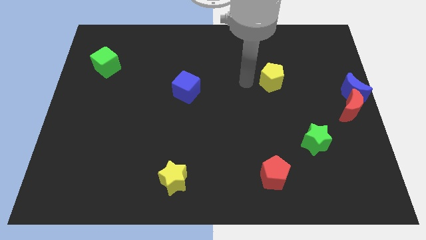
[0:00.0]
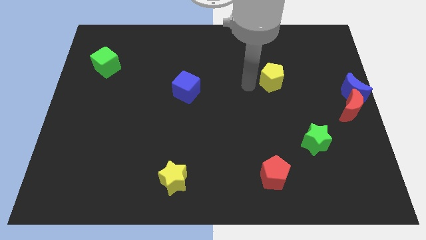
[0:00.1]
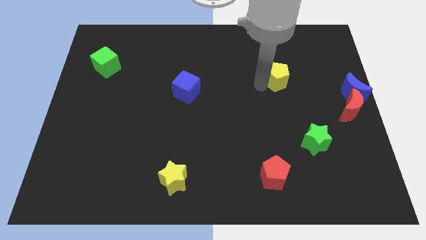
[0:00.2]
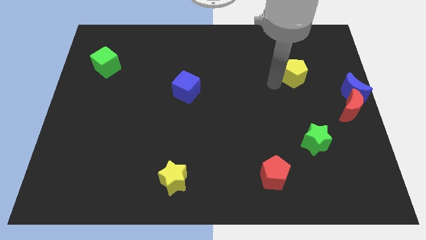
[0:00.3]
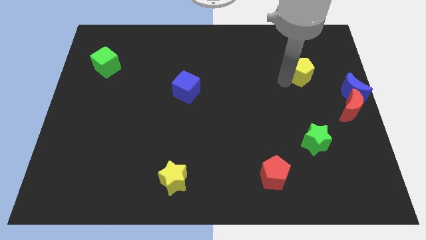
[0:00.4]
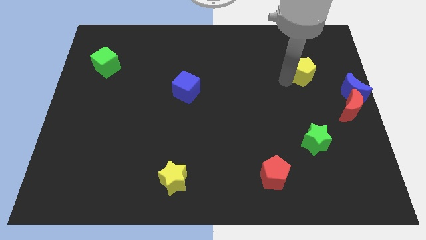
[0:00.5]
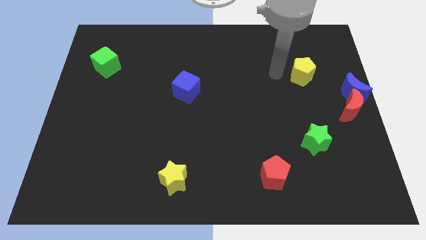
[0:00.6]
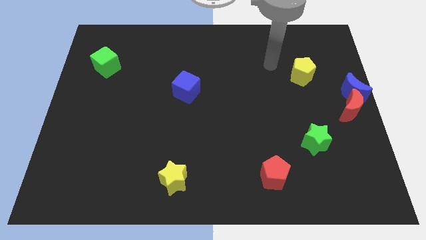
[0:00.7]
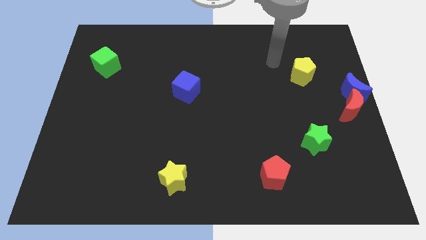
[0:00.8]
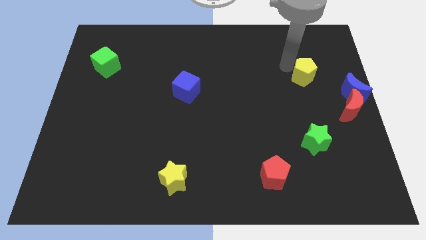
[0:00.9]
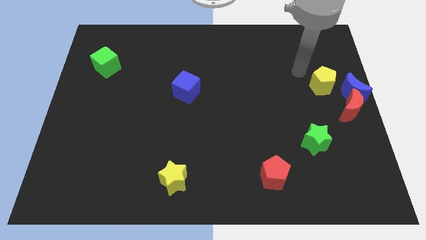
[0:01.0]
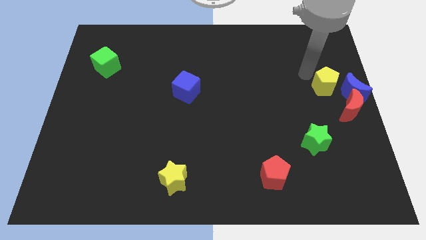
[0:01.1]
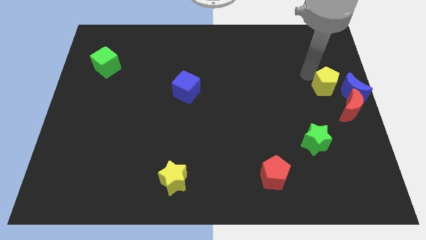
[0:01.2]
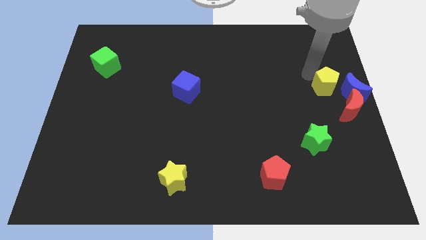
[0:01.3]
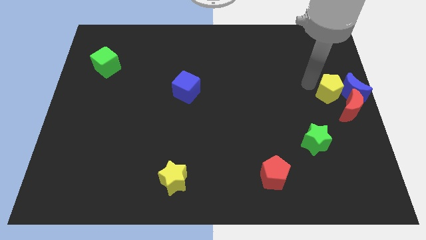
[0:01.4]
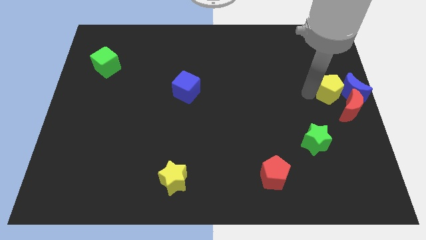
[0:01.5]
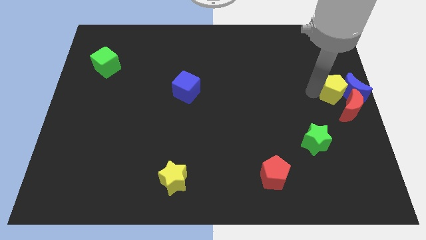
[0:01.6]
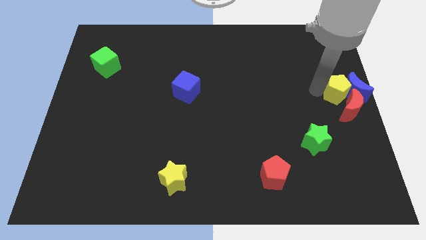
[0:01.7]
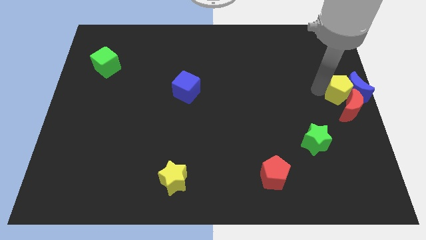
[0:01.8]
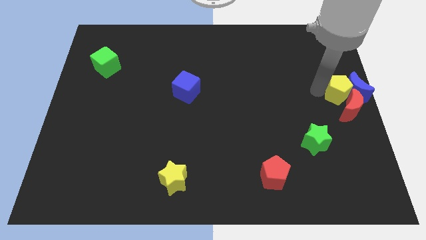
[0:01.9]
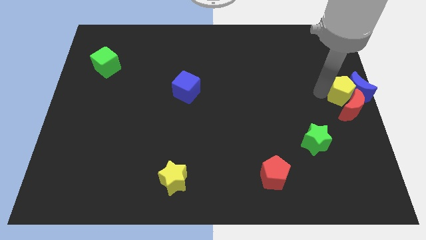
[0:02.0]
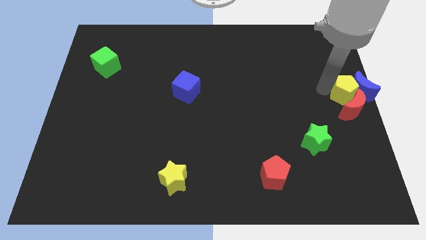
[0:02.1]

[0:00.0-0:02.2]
push the yellow pentagon into blue moon

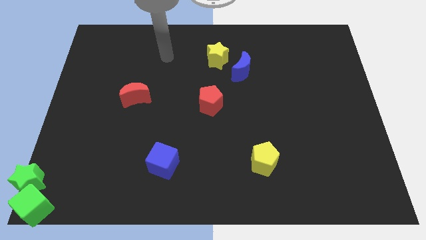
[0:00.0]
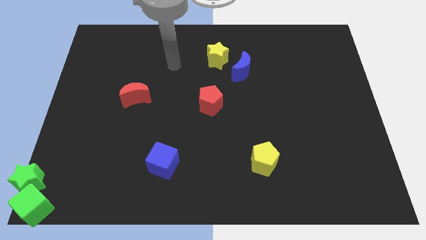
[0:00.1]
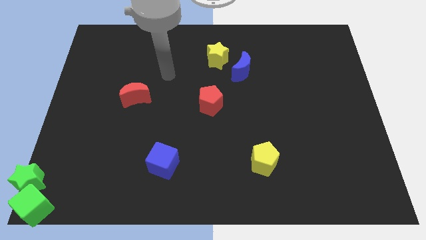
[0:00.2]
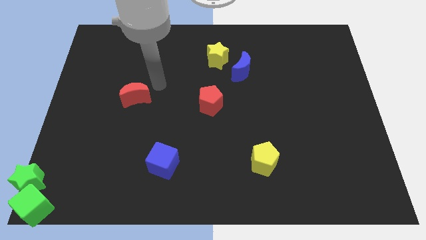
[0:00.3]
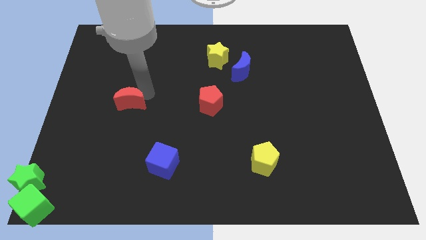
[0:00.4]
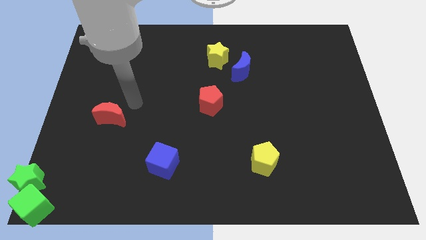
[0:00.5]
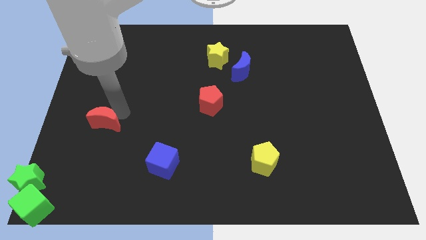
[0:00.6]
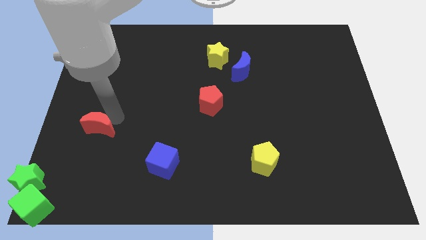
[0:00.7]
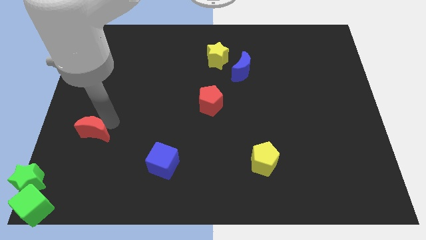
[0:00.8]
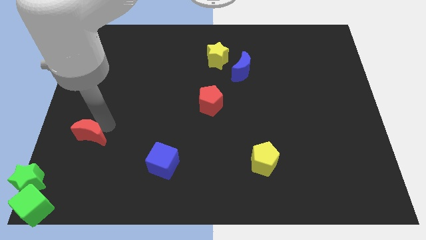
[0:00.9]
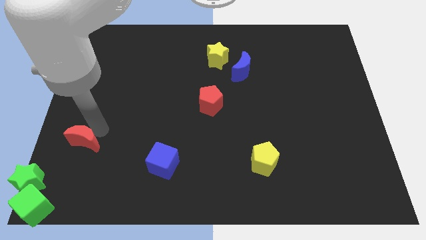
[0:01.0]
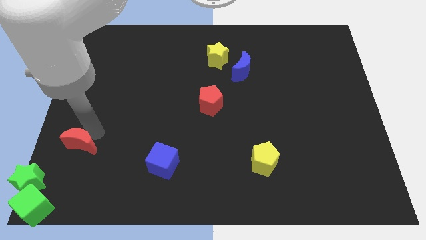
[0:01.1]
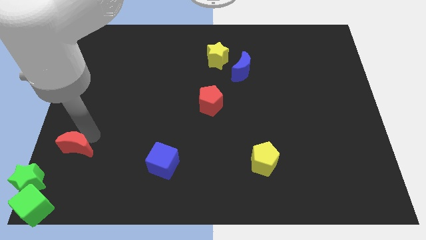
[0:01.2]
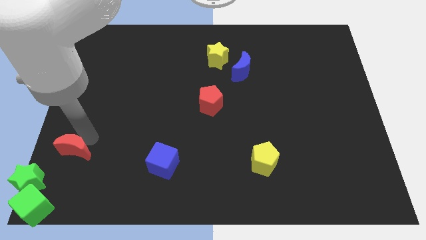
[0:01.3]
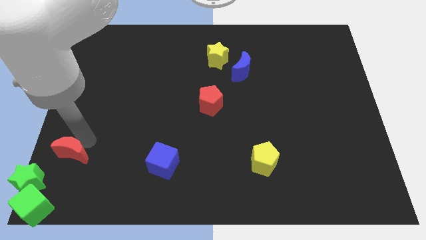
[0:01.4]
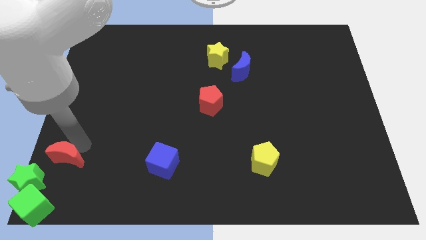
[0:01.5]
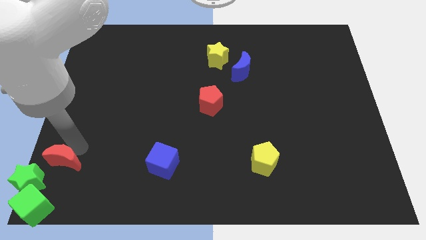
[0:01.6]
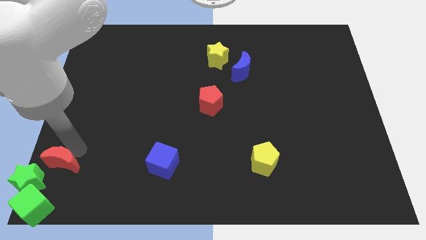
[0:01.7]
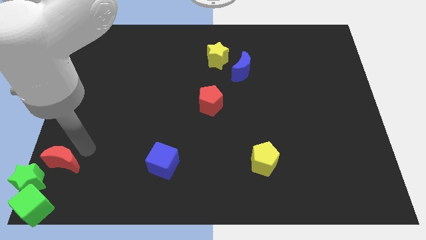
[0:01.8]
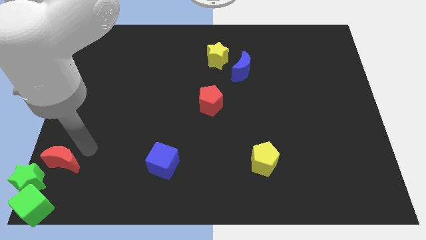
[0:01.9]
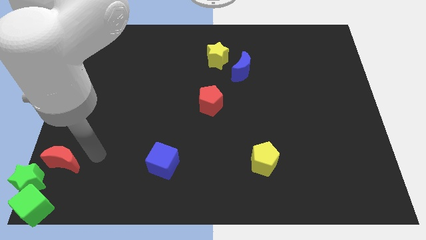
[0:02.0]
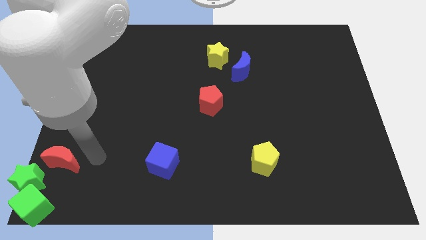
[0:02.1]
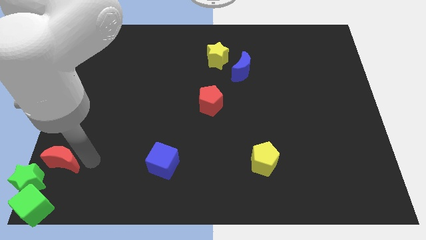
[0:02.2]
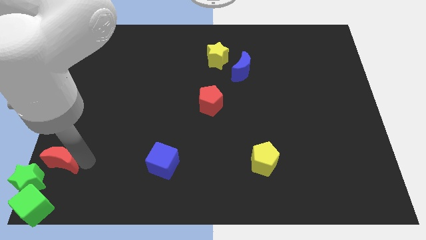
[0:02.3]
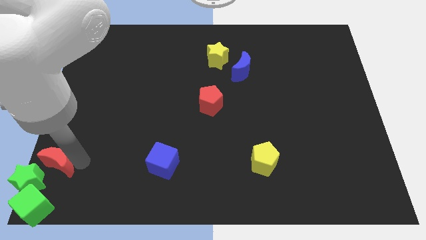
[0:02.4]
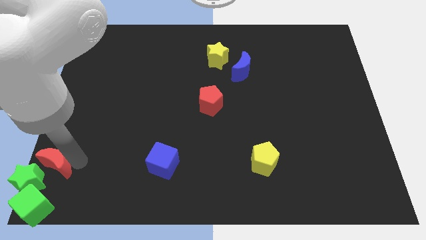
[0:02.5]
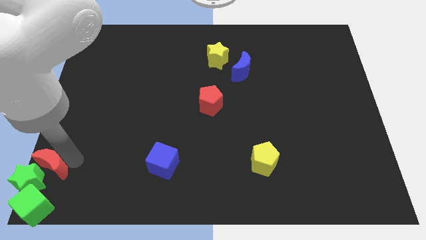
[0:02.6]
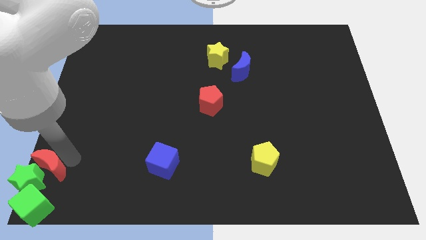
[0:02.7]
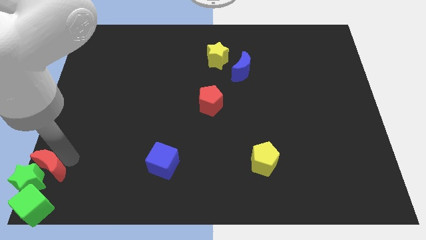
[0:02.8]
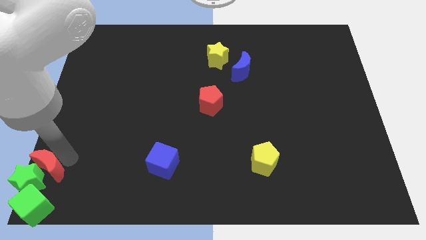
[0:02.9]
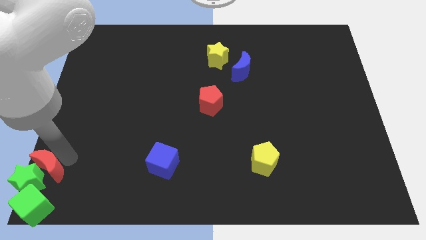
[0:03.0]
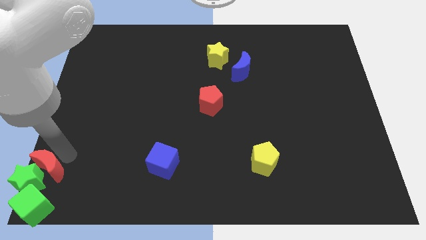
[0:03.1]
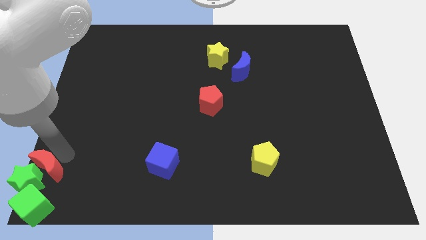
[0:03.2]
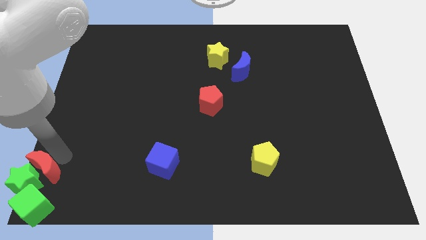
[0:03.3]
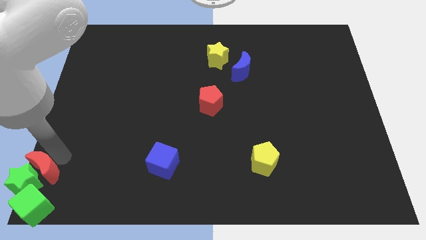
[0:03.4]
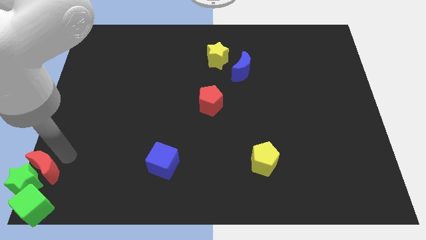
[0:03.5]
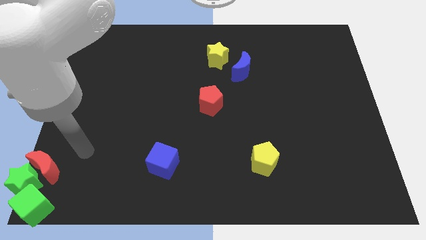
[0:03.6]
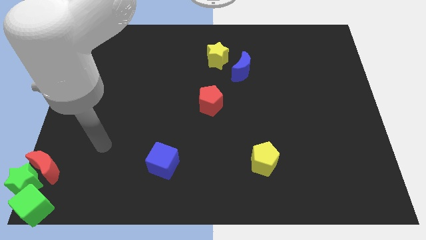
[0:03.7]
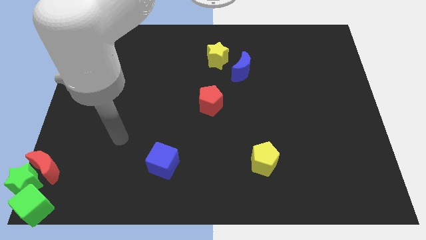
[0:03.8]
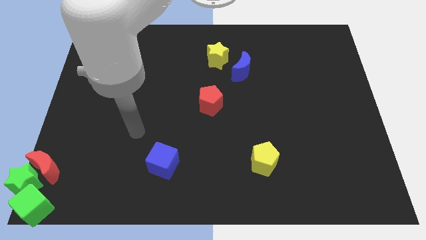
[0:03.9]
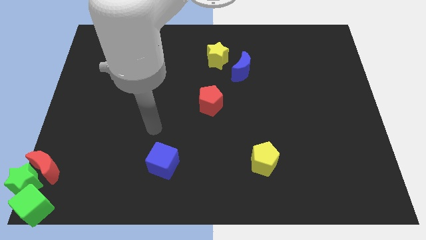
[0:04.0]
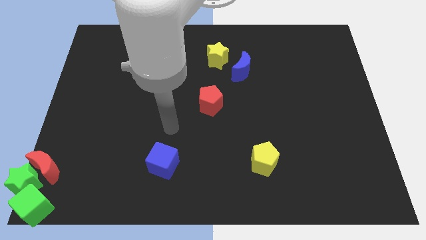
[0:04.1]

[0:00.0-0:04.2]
push the red crescent into the green star

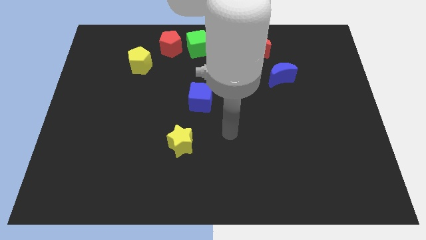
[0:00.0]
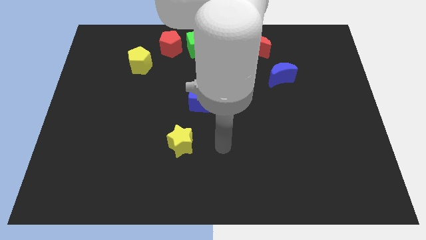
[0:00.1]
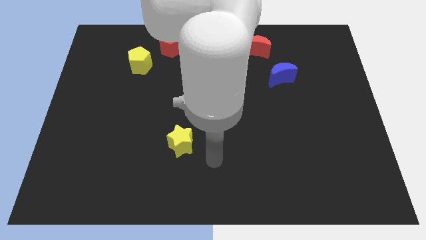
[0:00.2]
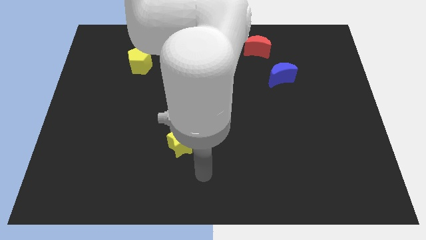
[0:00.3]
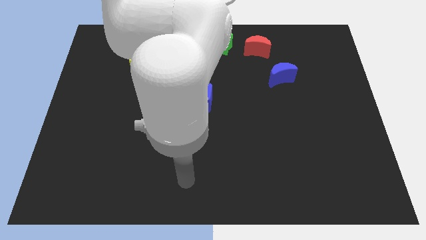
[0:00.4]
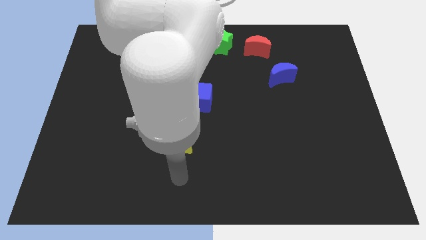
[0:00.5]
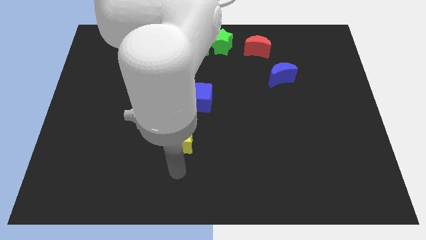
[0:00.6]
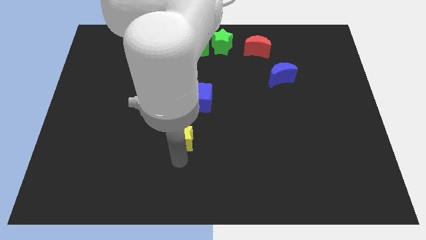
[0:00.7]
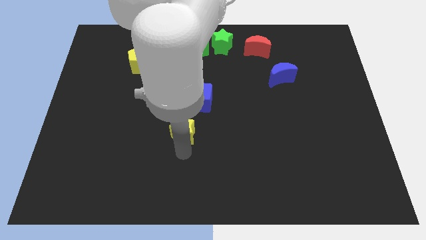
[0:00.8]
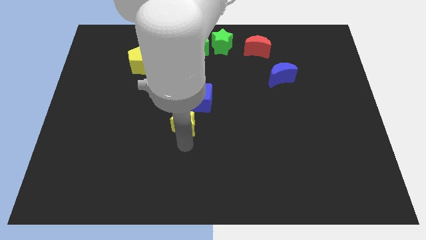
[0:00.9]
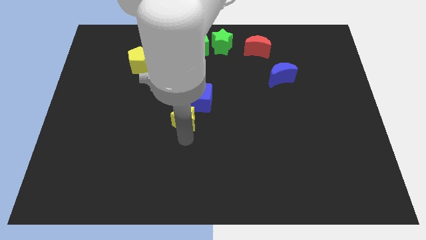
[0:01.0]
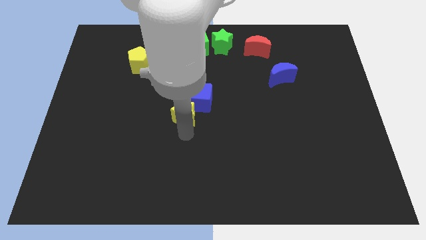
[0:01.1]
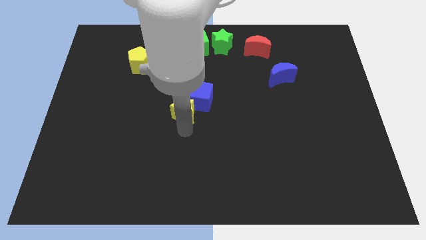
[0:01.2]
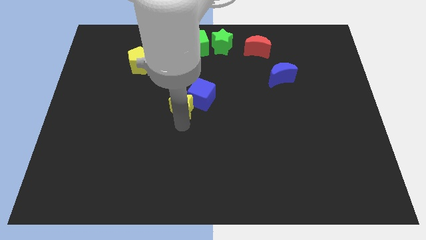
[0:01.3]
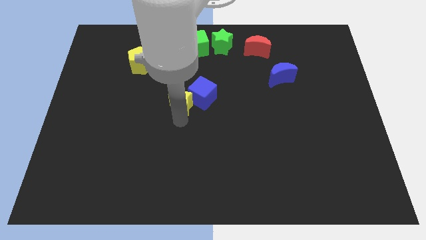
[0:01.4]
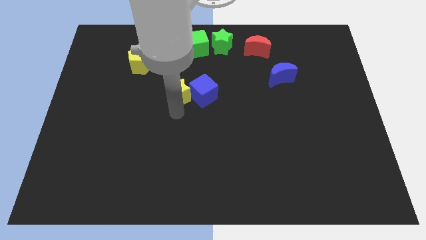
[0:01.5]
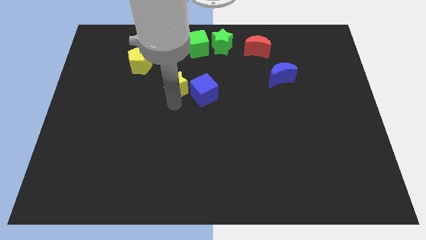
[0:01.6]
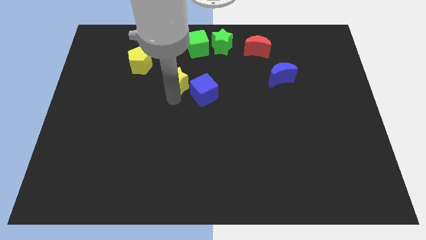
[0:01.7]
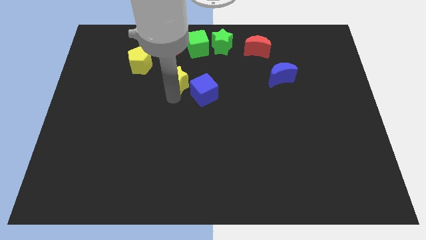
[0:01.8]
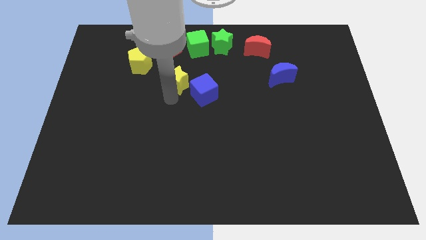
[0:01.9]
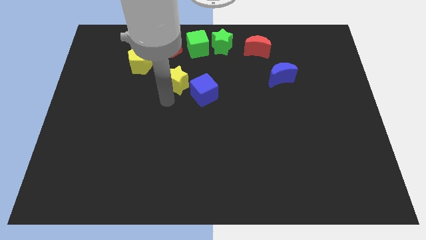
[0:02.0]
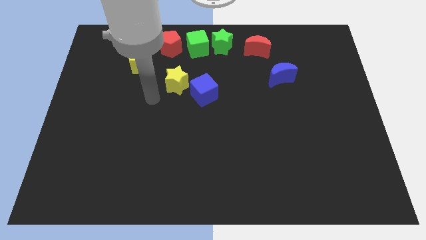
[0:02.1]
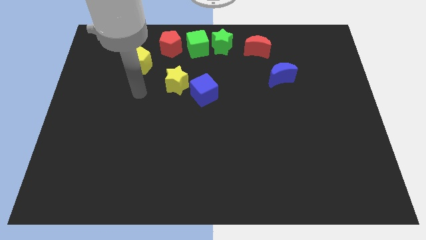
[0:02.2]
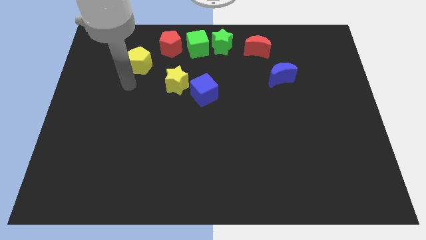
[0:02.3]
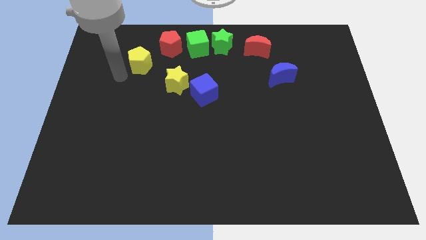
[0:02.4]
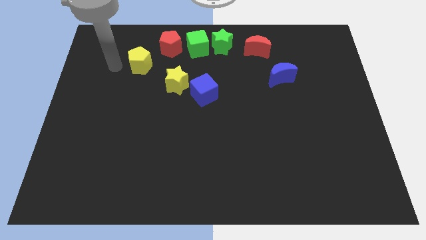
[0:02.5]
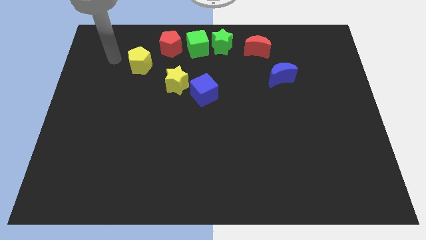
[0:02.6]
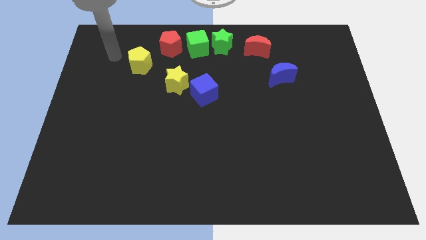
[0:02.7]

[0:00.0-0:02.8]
slide the yellow star between yellow pentagon and blue cube
